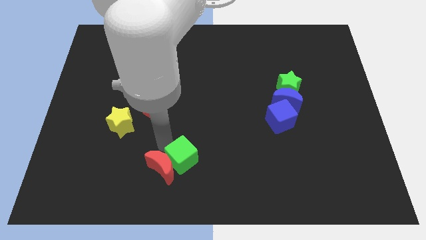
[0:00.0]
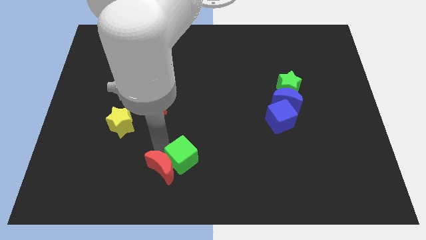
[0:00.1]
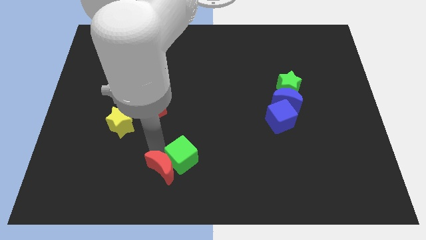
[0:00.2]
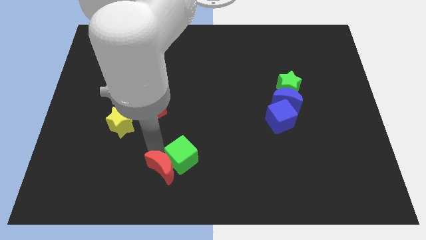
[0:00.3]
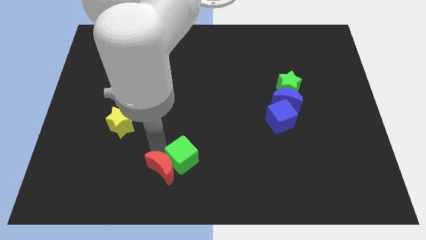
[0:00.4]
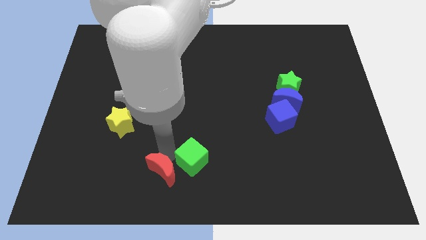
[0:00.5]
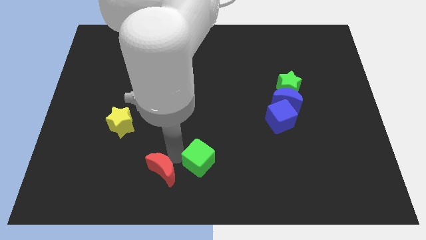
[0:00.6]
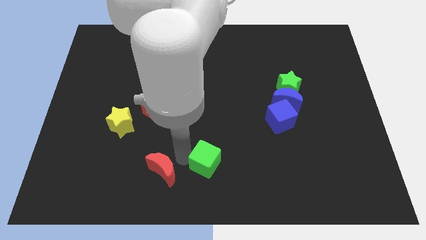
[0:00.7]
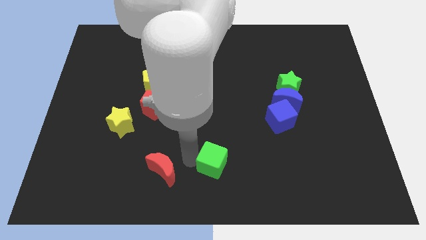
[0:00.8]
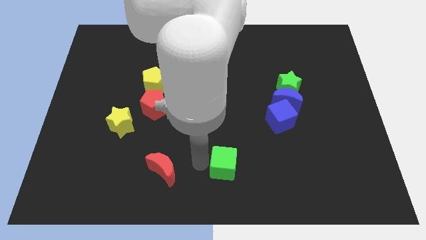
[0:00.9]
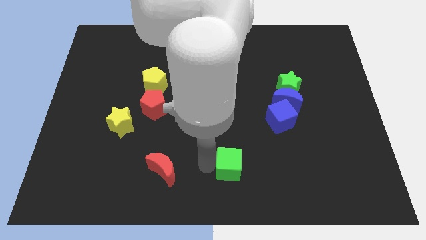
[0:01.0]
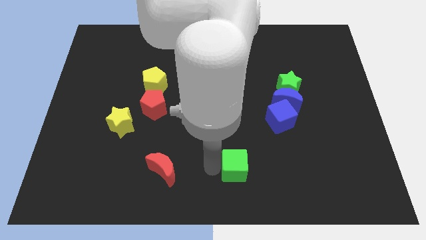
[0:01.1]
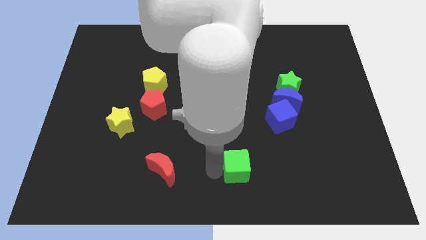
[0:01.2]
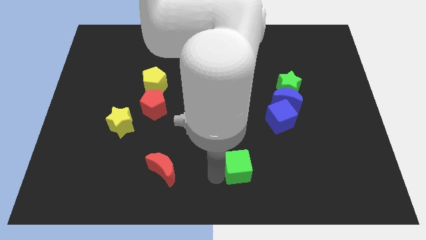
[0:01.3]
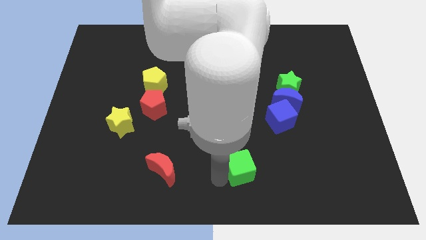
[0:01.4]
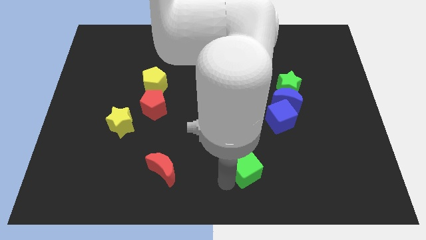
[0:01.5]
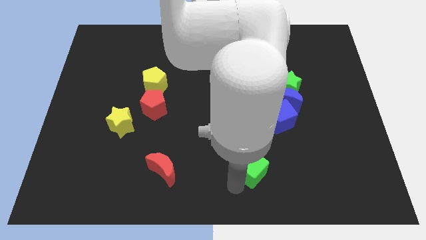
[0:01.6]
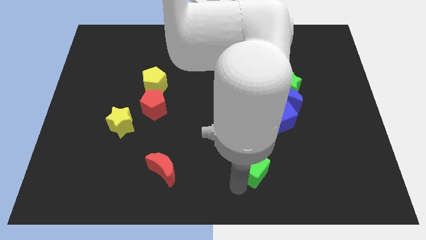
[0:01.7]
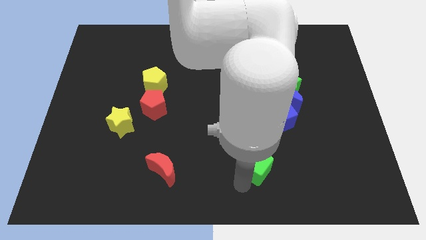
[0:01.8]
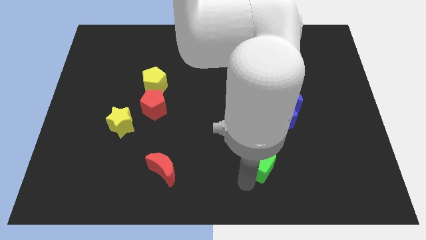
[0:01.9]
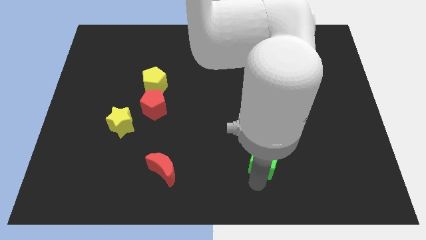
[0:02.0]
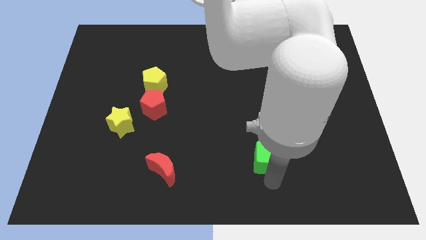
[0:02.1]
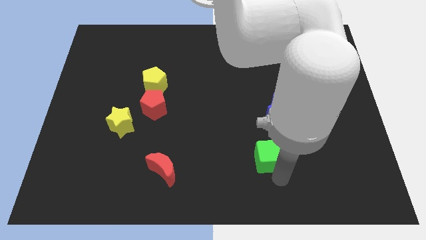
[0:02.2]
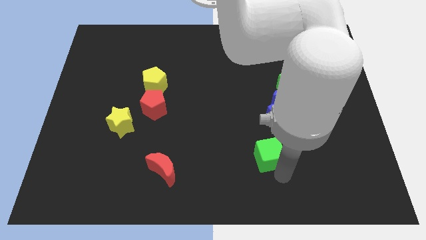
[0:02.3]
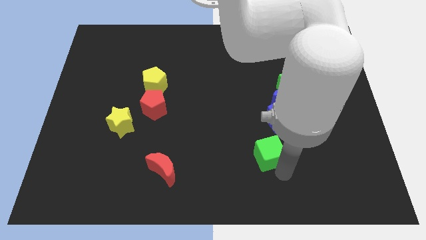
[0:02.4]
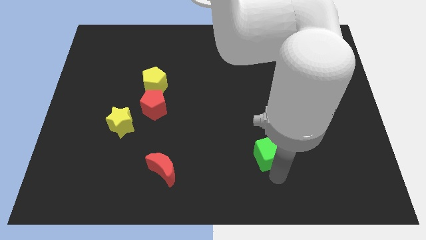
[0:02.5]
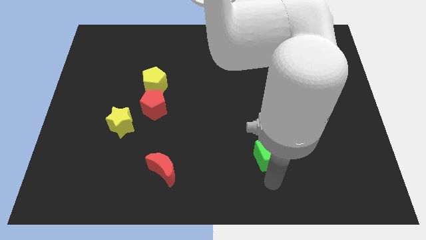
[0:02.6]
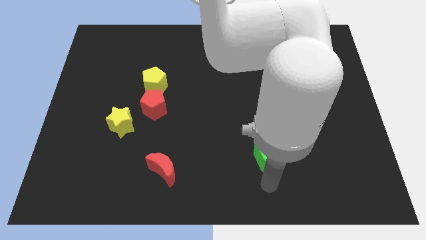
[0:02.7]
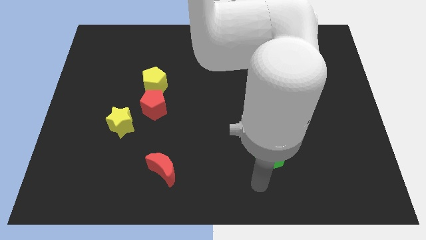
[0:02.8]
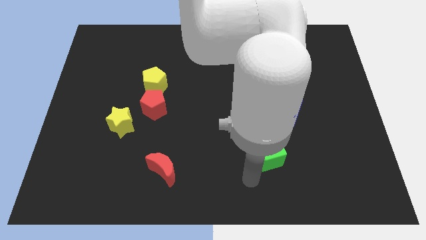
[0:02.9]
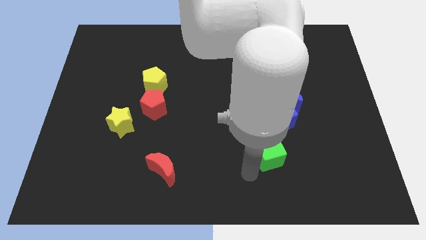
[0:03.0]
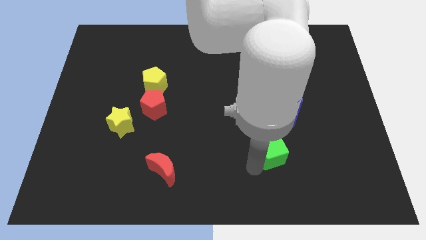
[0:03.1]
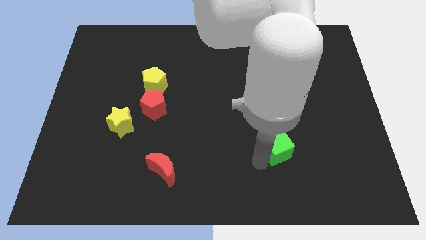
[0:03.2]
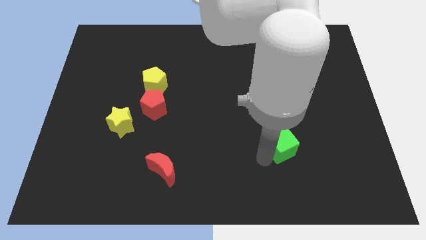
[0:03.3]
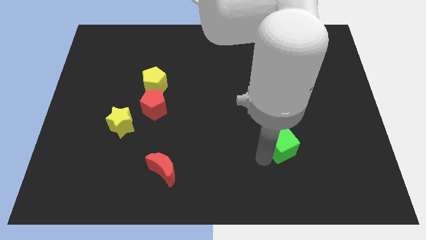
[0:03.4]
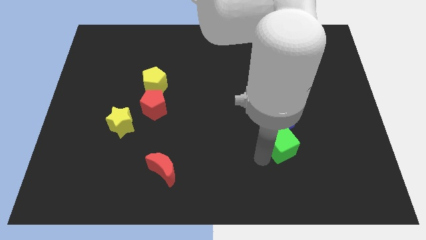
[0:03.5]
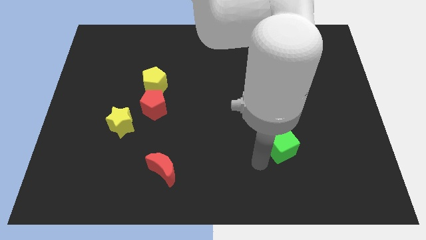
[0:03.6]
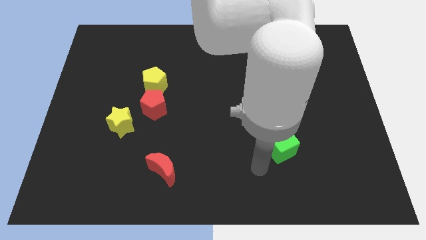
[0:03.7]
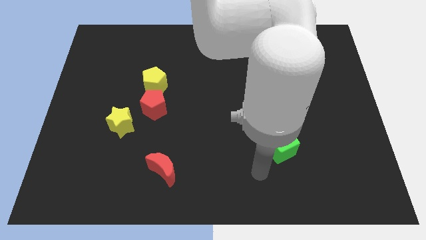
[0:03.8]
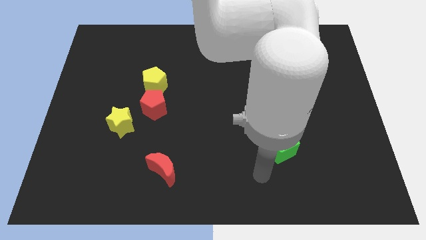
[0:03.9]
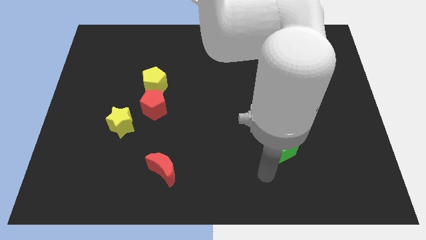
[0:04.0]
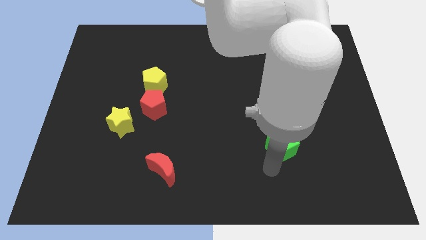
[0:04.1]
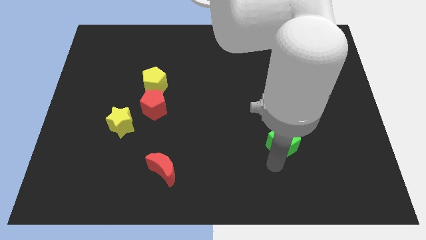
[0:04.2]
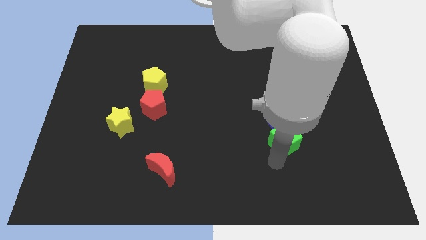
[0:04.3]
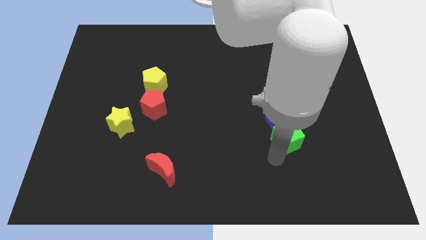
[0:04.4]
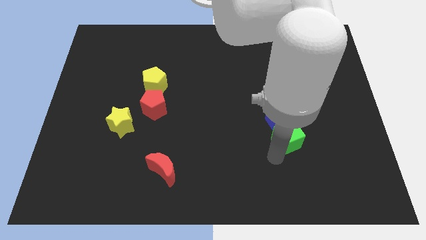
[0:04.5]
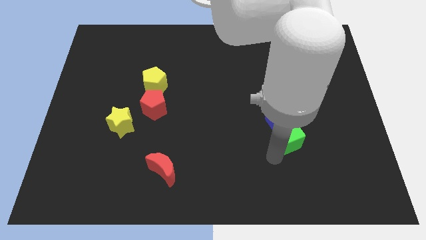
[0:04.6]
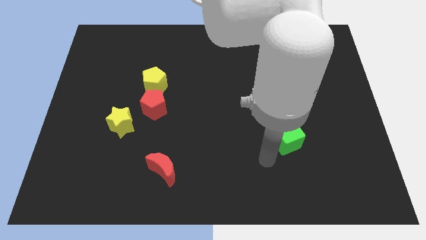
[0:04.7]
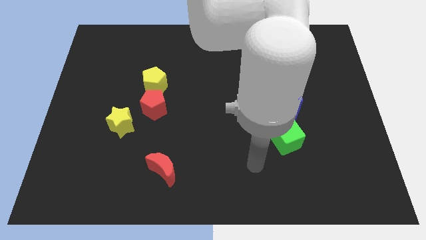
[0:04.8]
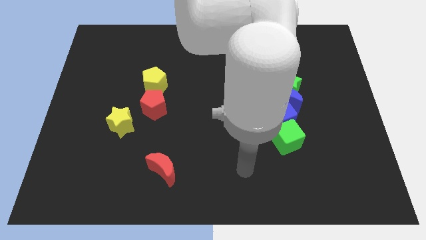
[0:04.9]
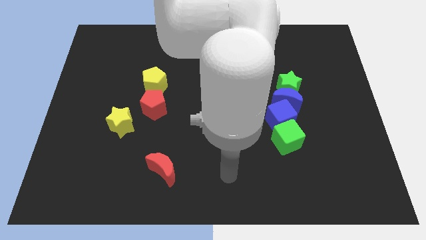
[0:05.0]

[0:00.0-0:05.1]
push the green cube to the bottom of the blue cube

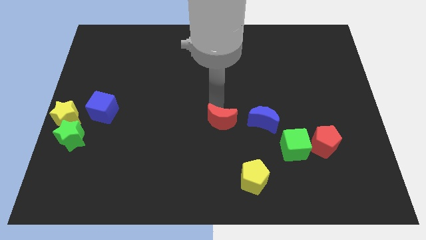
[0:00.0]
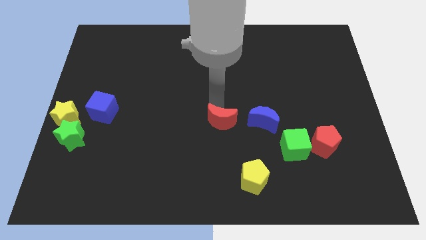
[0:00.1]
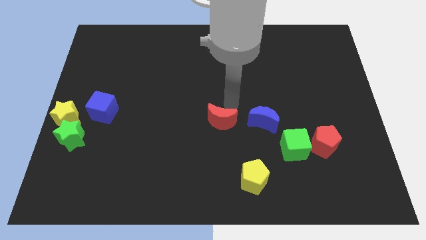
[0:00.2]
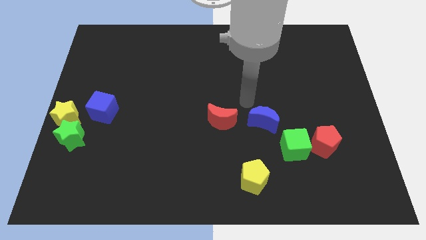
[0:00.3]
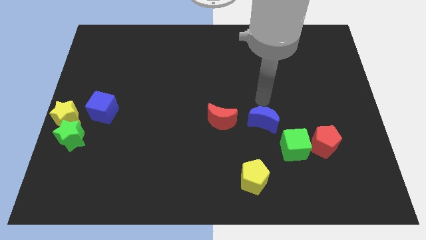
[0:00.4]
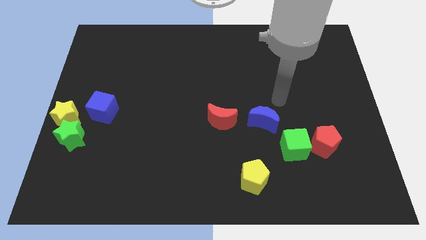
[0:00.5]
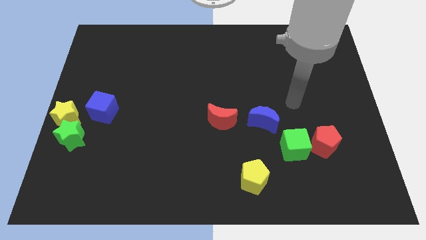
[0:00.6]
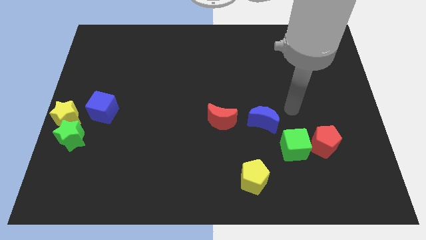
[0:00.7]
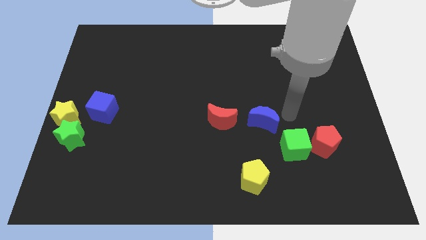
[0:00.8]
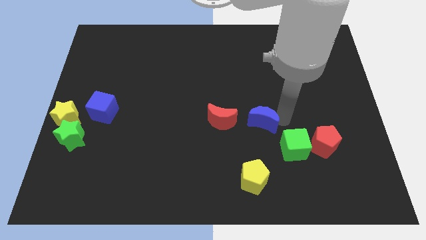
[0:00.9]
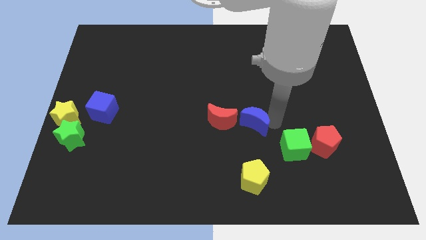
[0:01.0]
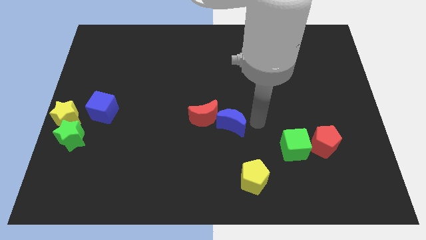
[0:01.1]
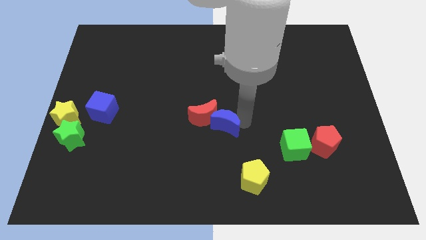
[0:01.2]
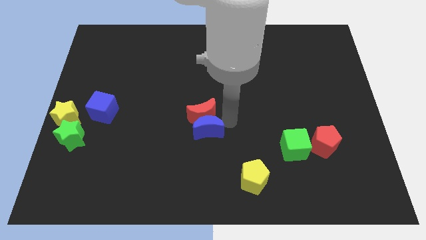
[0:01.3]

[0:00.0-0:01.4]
push the blue crescent into the red crescent

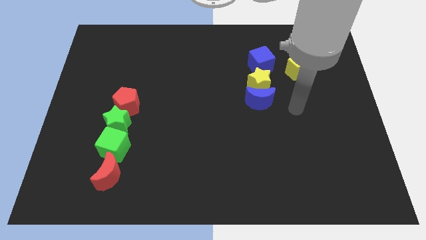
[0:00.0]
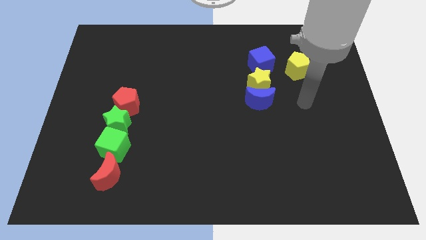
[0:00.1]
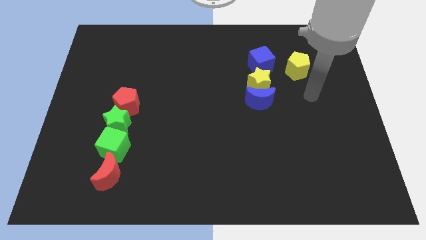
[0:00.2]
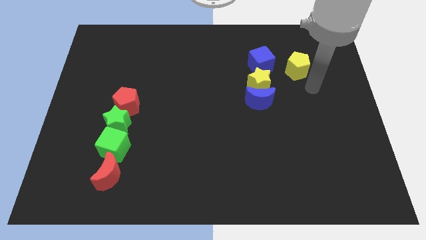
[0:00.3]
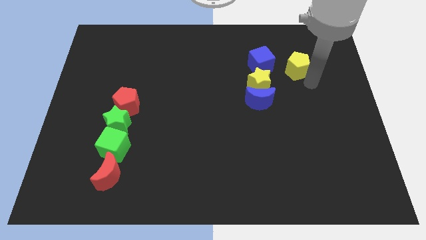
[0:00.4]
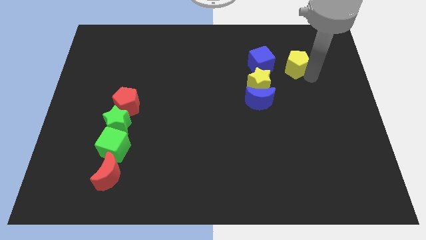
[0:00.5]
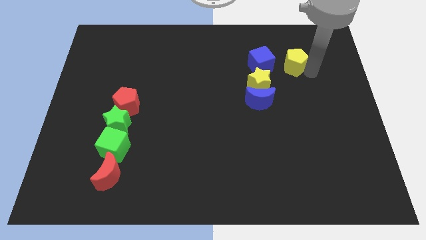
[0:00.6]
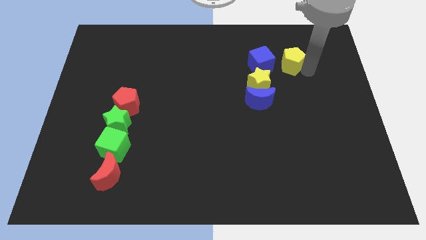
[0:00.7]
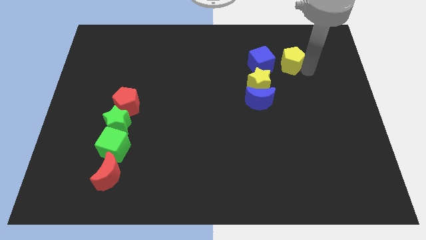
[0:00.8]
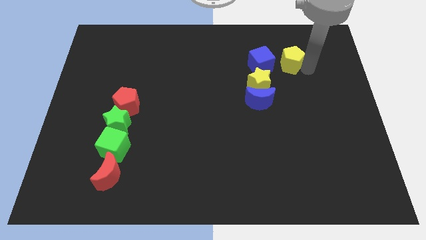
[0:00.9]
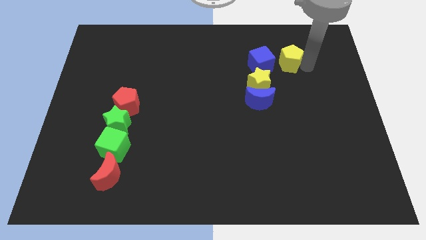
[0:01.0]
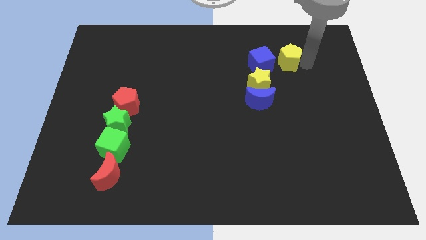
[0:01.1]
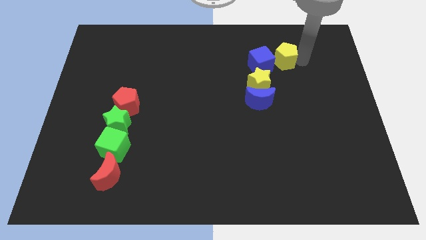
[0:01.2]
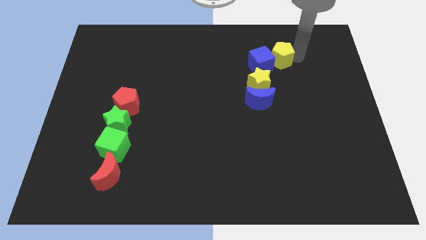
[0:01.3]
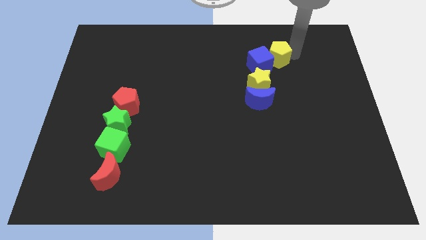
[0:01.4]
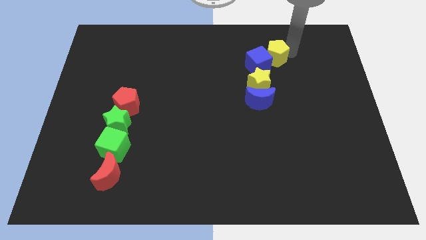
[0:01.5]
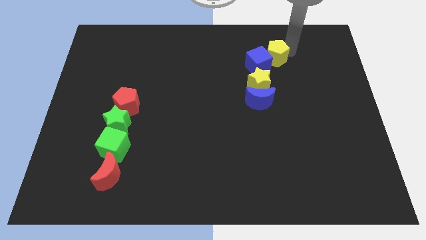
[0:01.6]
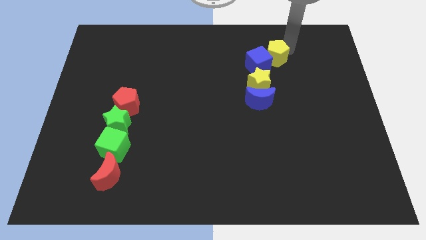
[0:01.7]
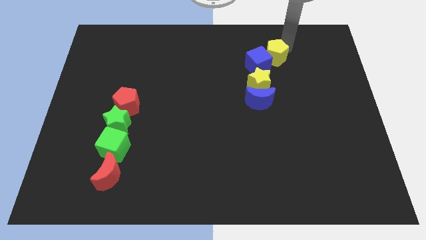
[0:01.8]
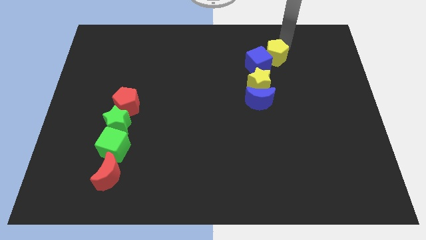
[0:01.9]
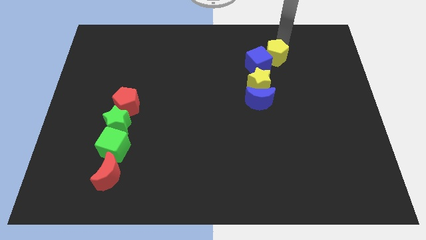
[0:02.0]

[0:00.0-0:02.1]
move the yellow pentagon into the blue cube
